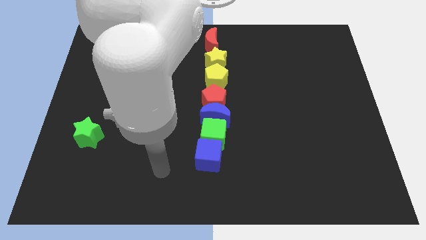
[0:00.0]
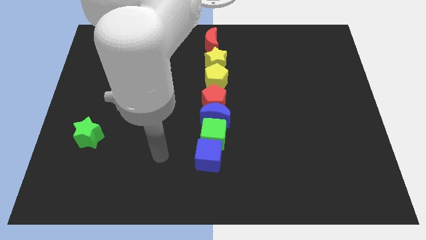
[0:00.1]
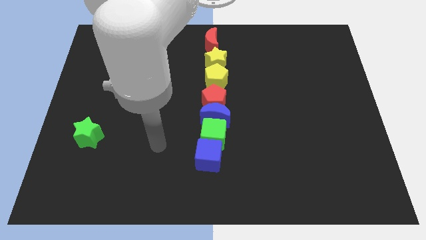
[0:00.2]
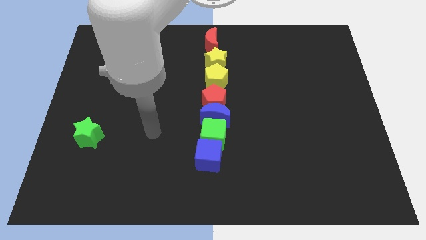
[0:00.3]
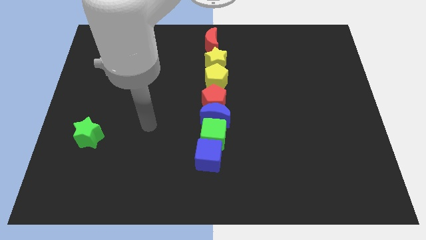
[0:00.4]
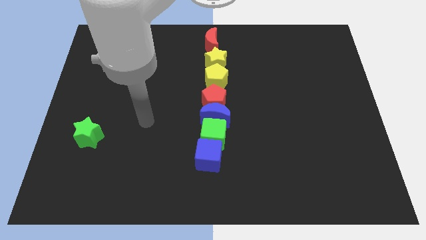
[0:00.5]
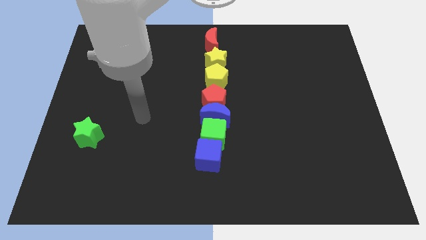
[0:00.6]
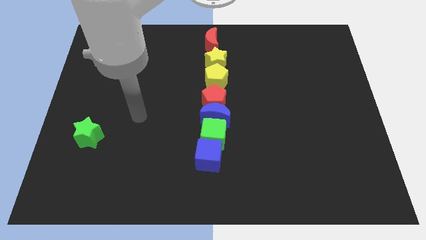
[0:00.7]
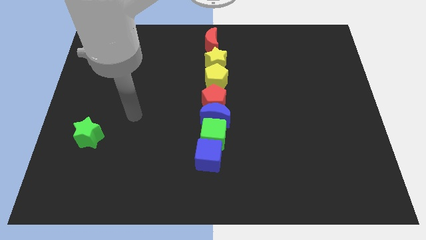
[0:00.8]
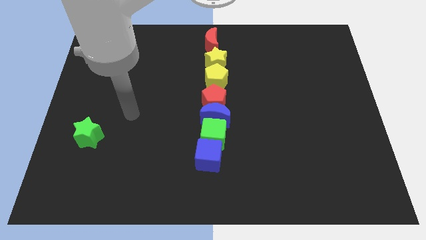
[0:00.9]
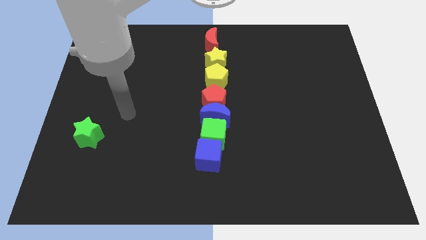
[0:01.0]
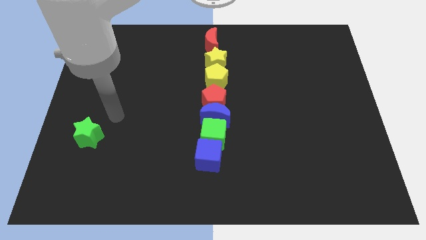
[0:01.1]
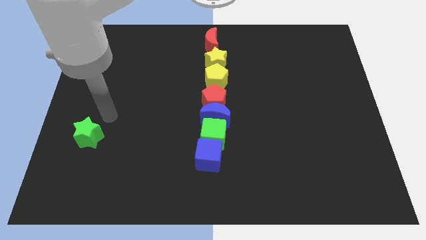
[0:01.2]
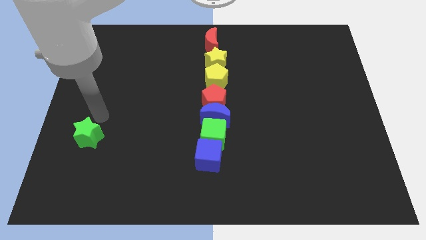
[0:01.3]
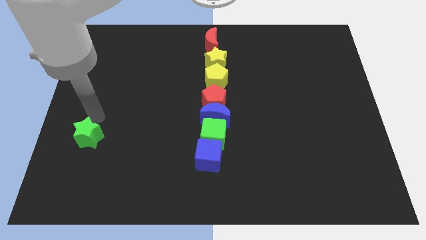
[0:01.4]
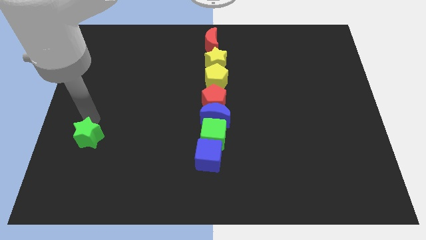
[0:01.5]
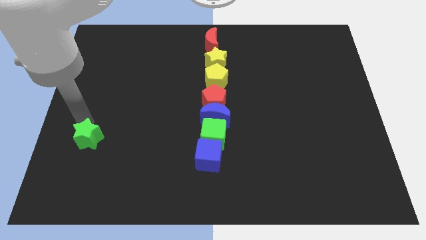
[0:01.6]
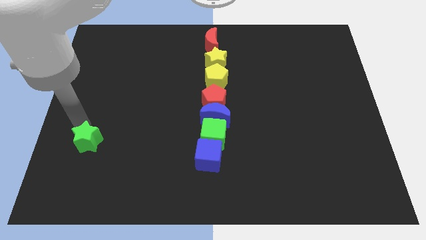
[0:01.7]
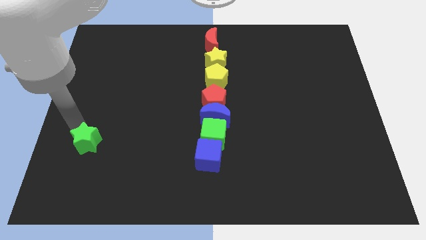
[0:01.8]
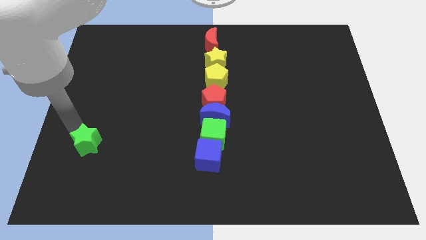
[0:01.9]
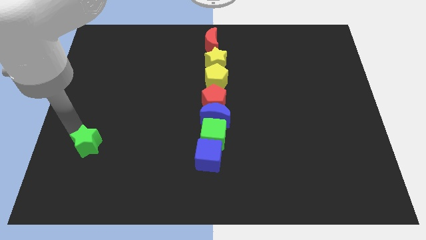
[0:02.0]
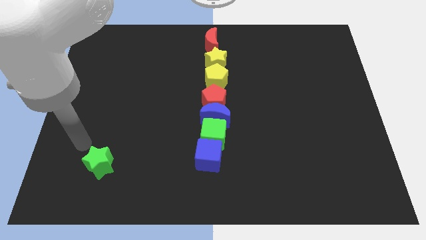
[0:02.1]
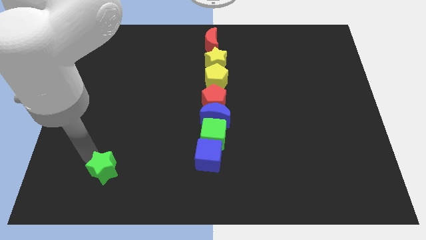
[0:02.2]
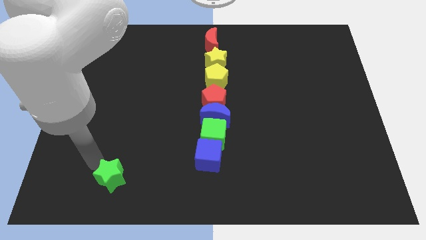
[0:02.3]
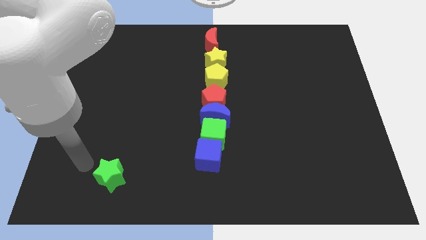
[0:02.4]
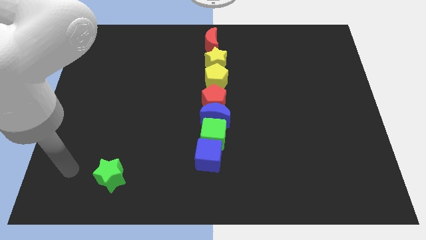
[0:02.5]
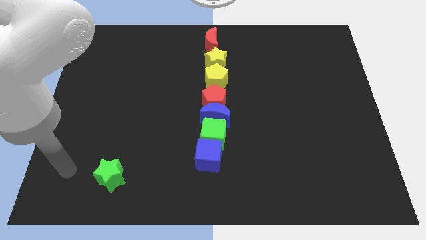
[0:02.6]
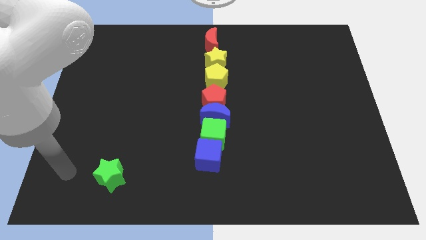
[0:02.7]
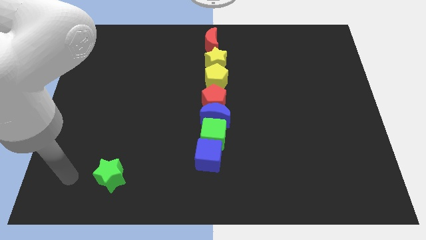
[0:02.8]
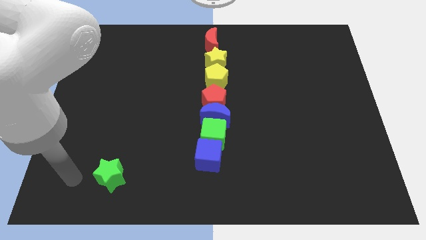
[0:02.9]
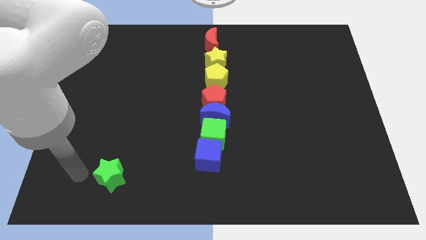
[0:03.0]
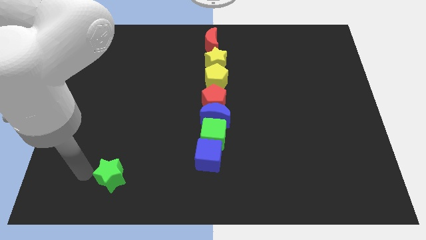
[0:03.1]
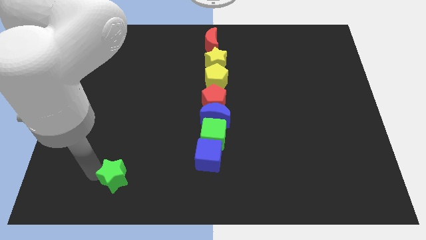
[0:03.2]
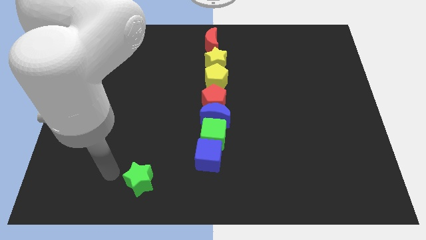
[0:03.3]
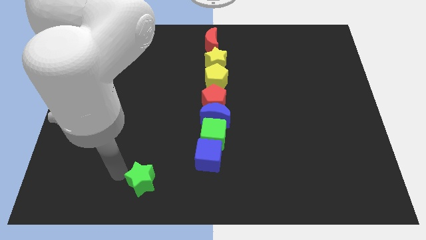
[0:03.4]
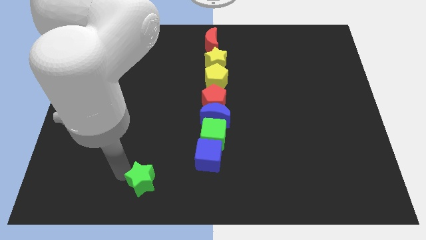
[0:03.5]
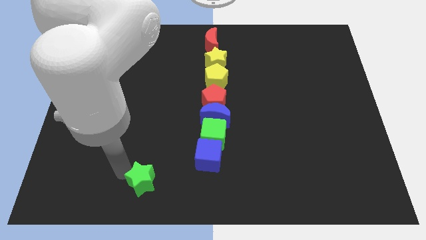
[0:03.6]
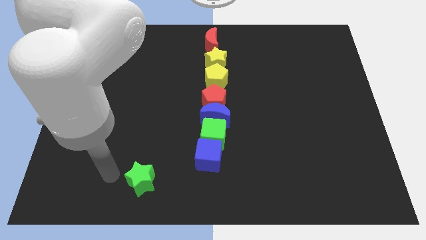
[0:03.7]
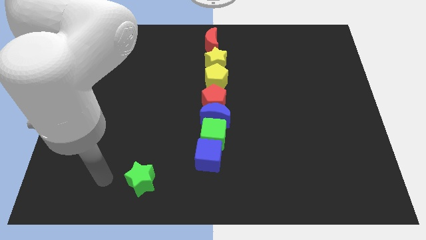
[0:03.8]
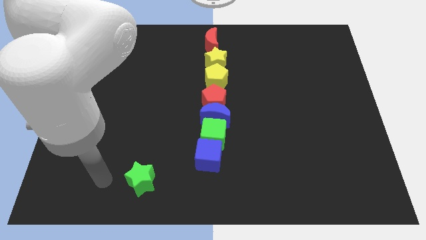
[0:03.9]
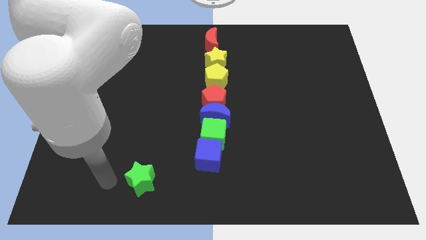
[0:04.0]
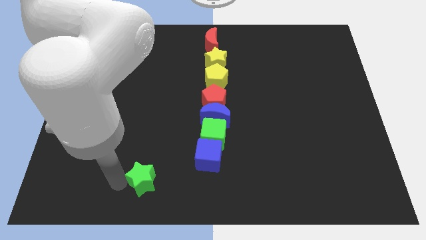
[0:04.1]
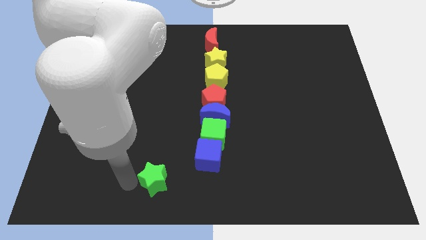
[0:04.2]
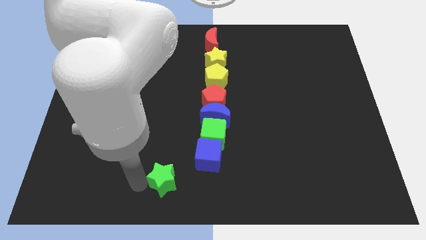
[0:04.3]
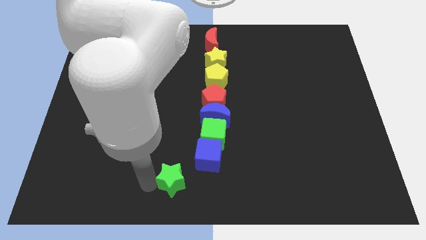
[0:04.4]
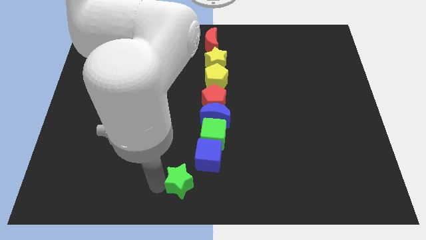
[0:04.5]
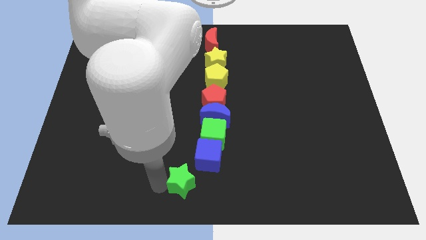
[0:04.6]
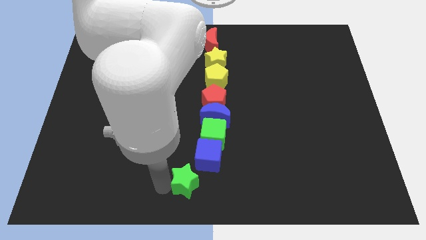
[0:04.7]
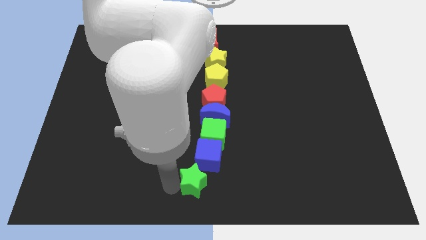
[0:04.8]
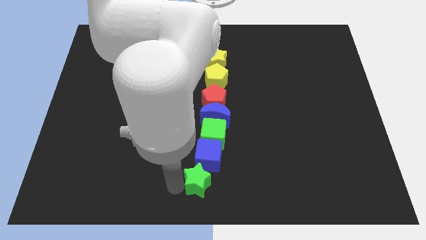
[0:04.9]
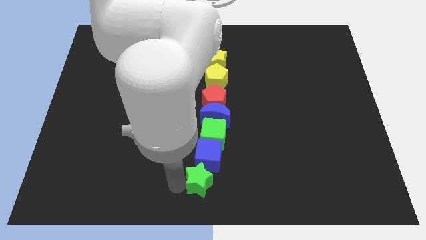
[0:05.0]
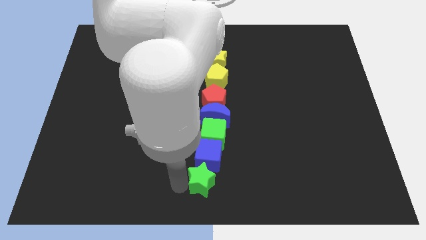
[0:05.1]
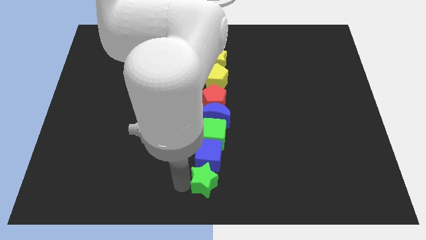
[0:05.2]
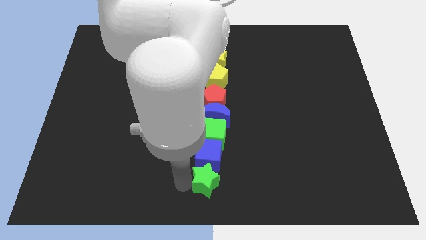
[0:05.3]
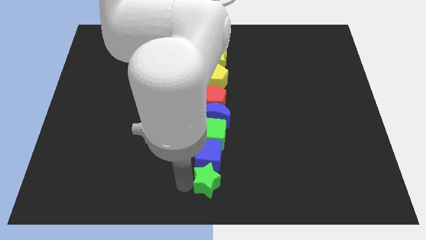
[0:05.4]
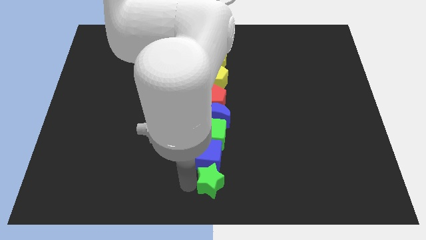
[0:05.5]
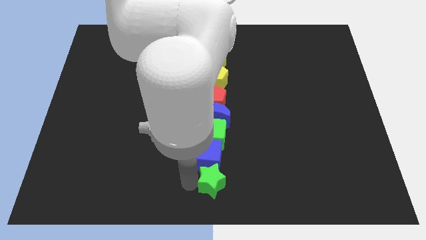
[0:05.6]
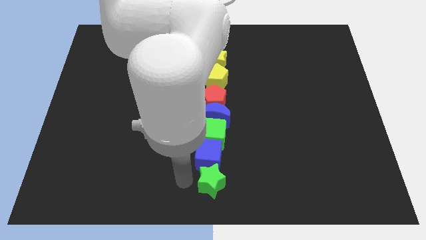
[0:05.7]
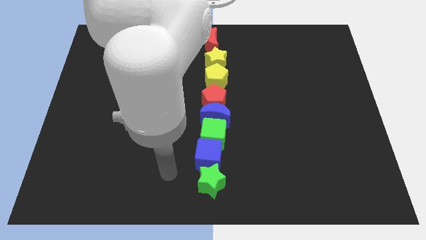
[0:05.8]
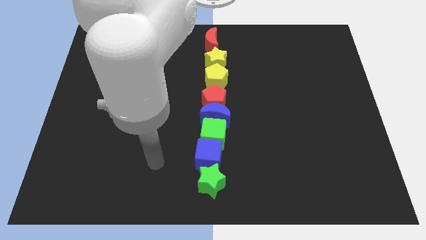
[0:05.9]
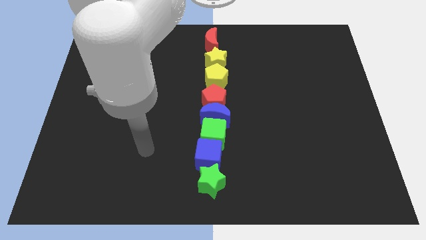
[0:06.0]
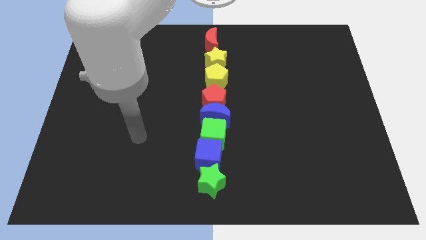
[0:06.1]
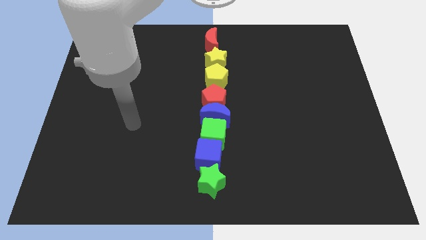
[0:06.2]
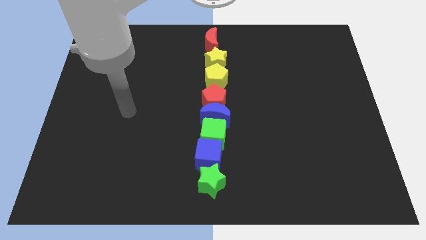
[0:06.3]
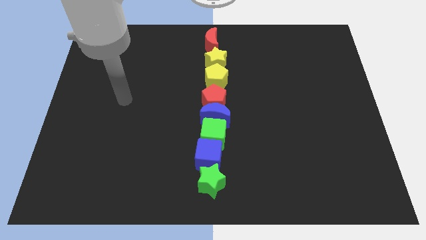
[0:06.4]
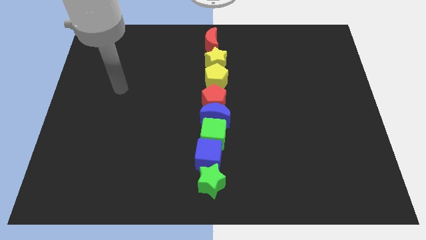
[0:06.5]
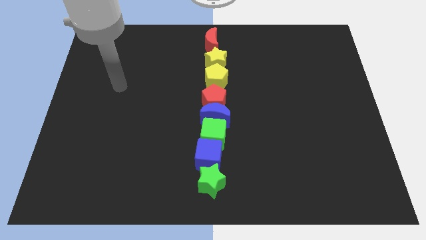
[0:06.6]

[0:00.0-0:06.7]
move the green star towards the right to the bottom side of blue cube to form a vertical line with the group of blocks

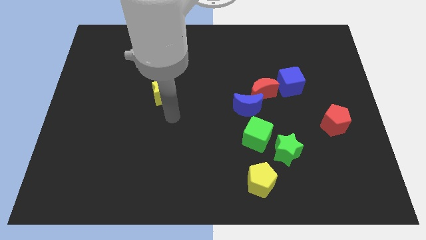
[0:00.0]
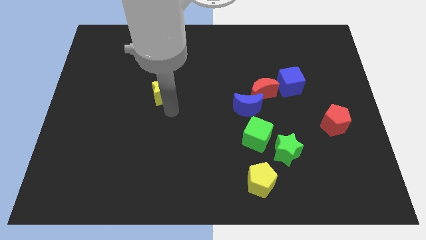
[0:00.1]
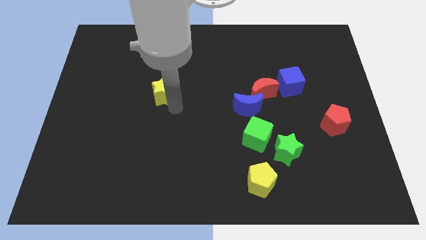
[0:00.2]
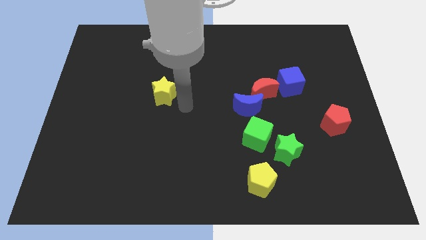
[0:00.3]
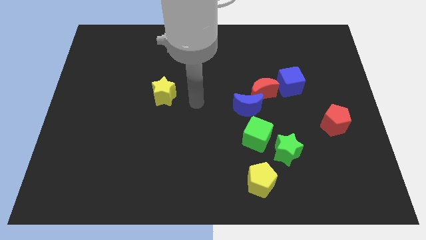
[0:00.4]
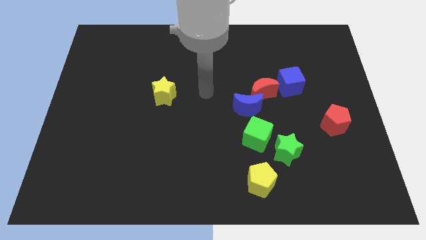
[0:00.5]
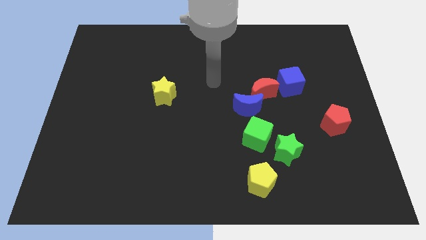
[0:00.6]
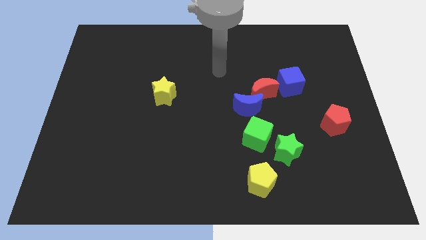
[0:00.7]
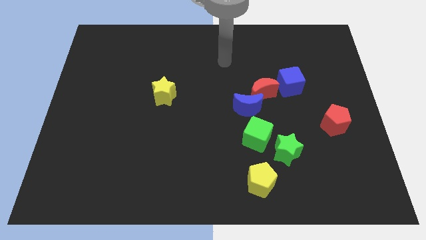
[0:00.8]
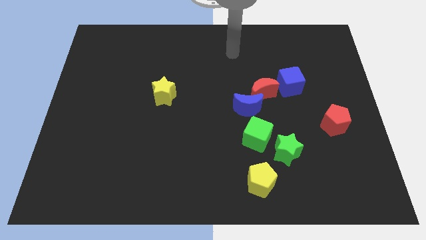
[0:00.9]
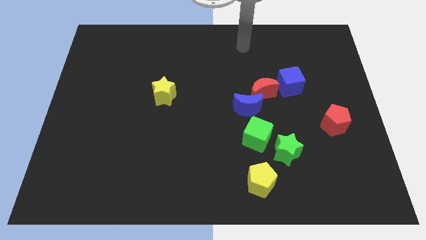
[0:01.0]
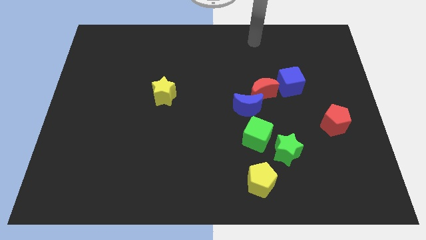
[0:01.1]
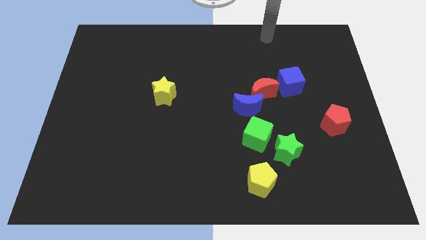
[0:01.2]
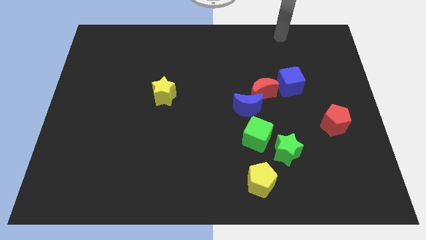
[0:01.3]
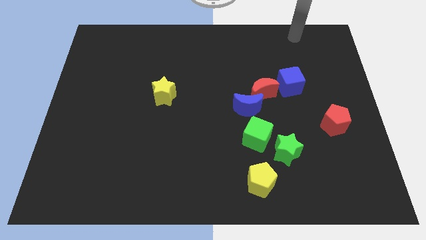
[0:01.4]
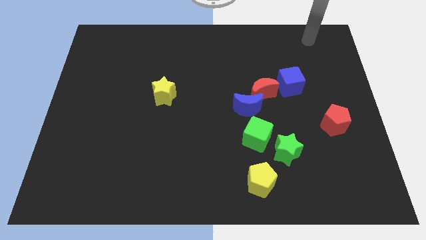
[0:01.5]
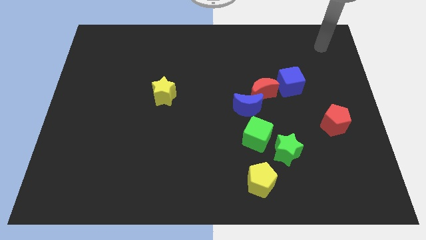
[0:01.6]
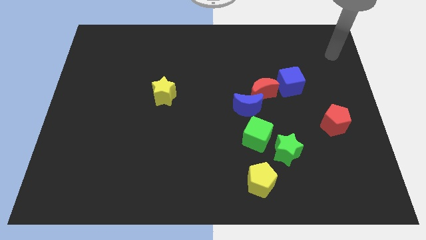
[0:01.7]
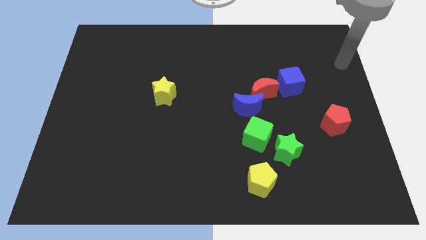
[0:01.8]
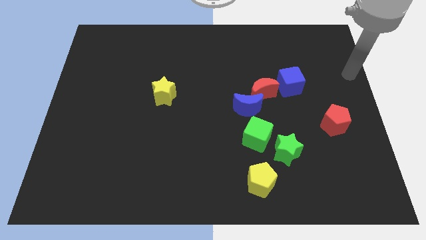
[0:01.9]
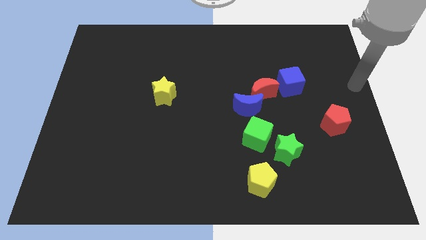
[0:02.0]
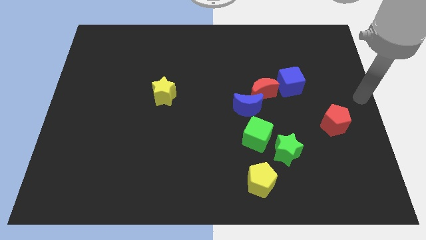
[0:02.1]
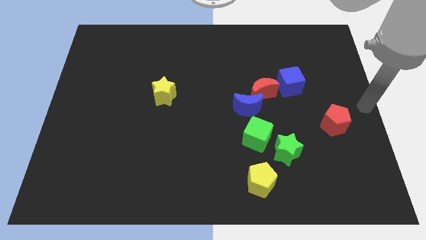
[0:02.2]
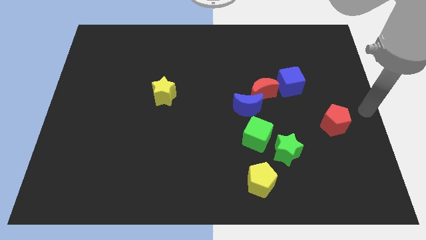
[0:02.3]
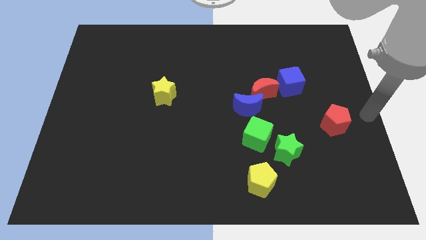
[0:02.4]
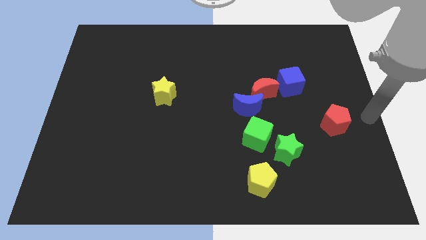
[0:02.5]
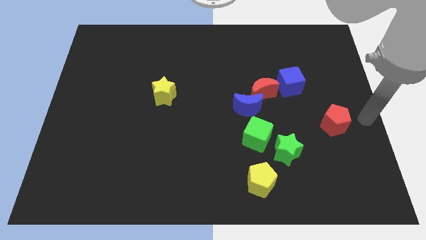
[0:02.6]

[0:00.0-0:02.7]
place arm near red pentagon
